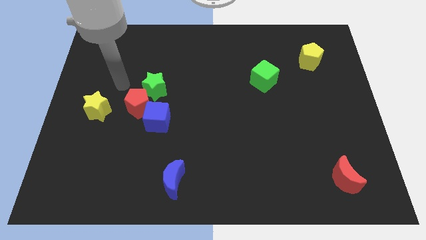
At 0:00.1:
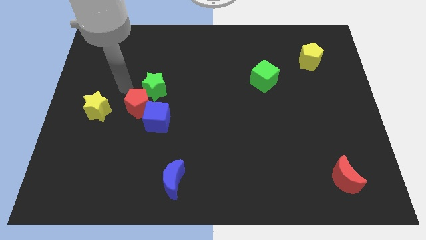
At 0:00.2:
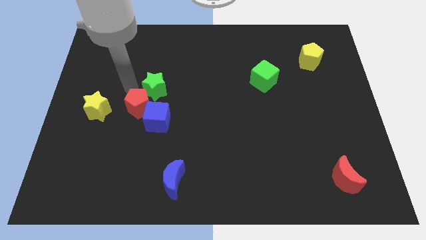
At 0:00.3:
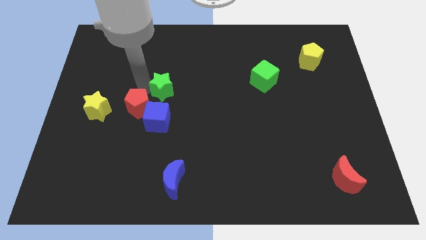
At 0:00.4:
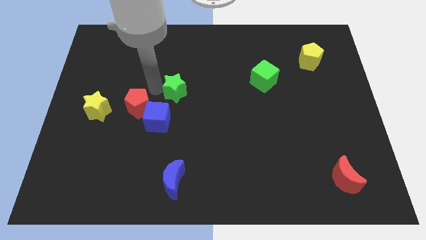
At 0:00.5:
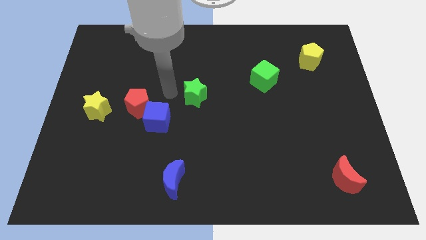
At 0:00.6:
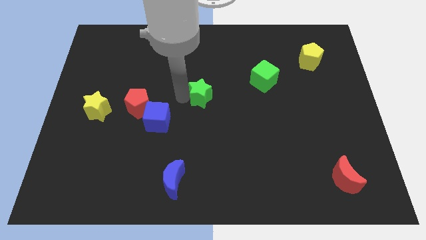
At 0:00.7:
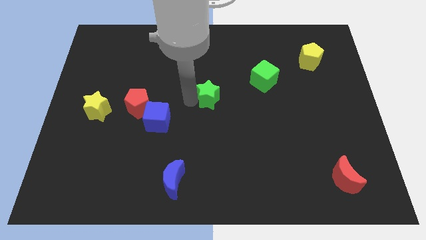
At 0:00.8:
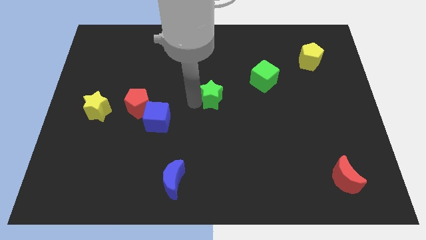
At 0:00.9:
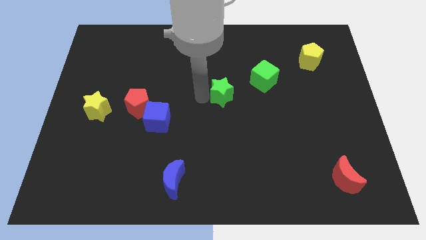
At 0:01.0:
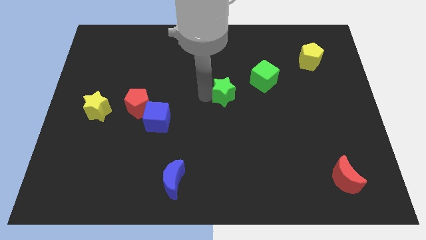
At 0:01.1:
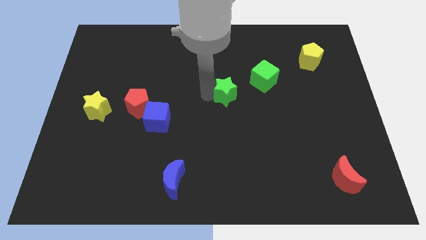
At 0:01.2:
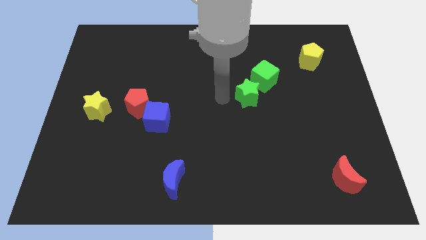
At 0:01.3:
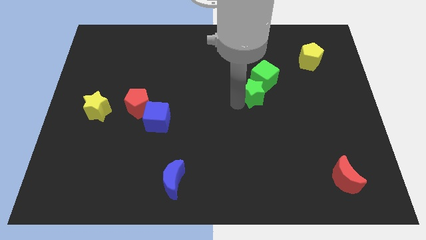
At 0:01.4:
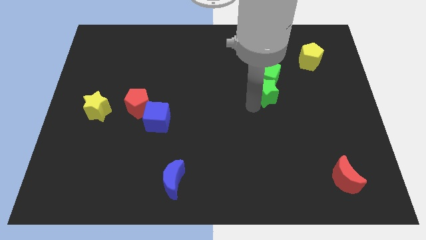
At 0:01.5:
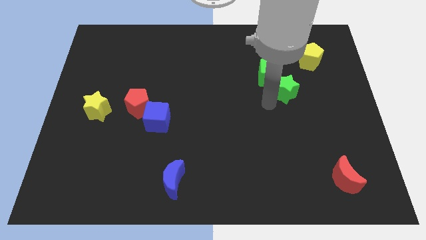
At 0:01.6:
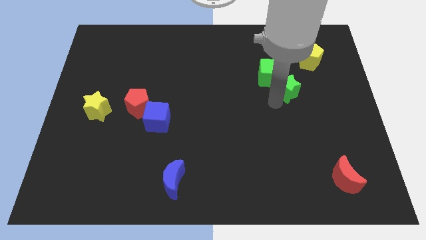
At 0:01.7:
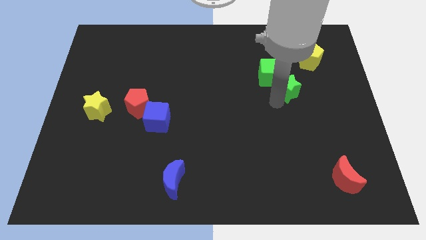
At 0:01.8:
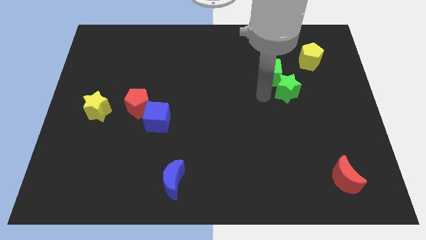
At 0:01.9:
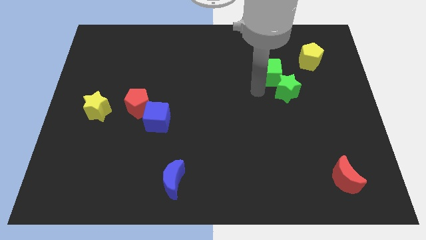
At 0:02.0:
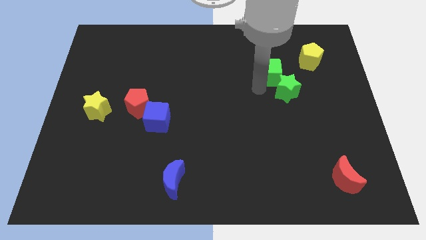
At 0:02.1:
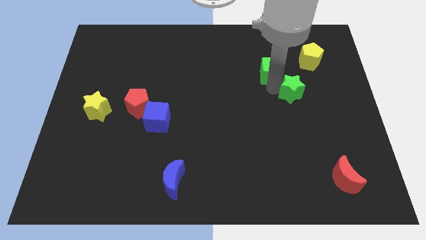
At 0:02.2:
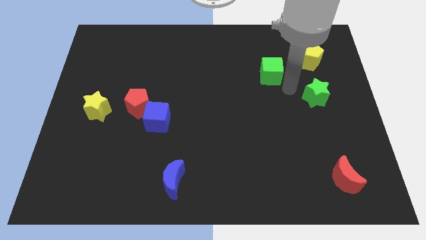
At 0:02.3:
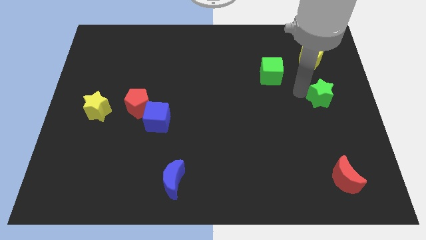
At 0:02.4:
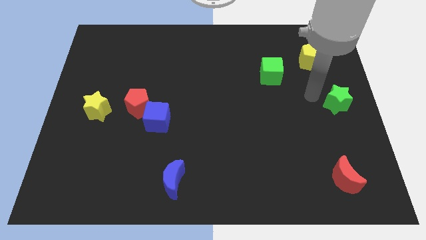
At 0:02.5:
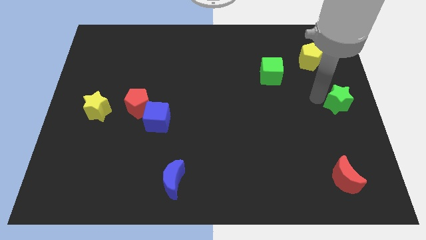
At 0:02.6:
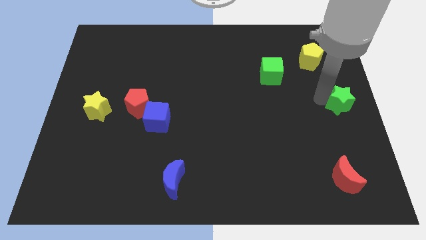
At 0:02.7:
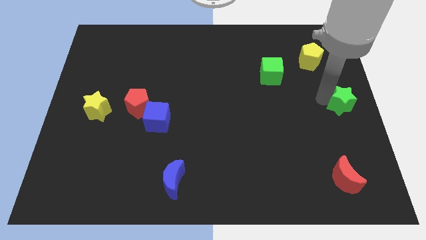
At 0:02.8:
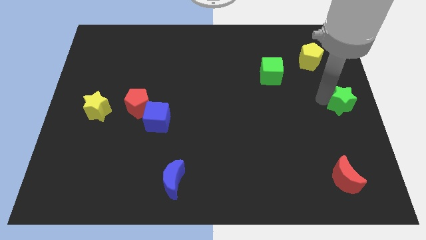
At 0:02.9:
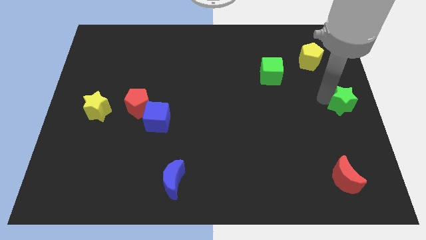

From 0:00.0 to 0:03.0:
move the green star to the center right of the board

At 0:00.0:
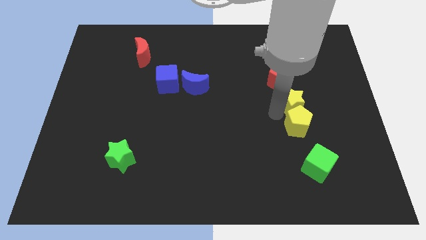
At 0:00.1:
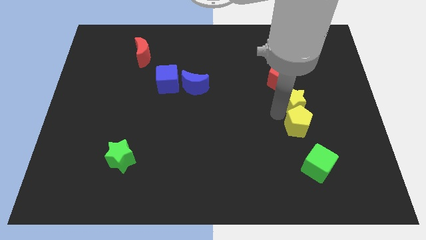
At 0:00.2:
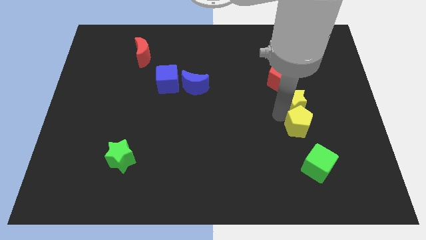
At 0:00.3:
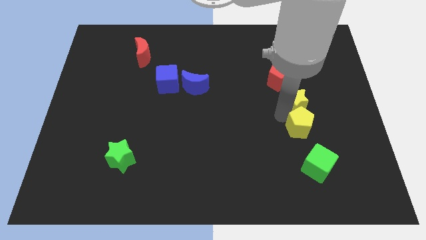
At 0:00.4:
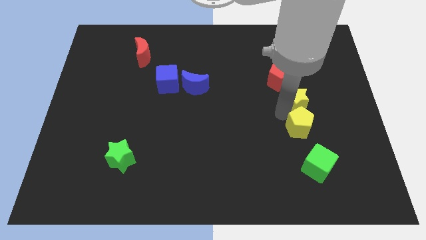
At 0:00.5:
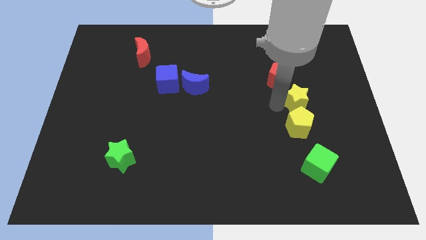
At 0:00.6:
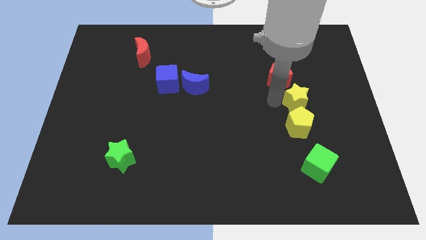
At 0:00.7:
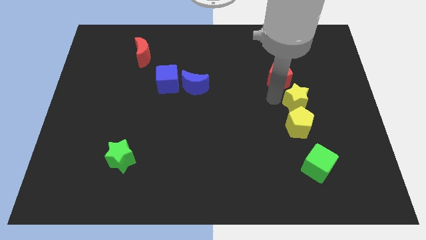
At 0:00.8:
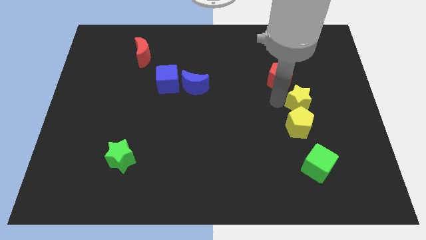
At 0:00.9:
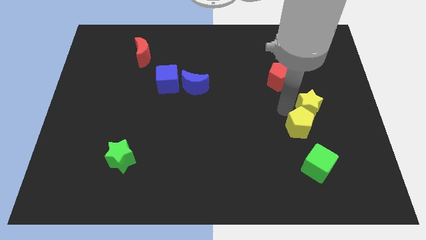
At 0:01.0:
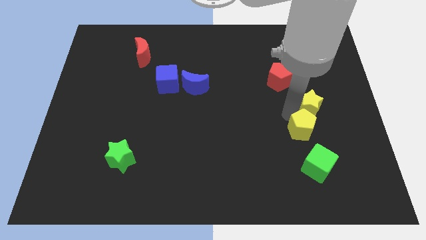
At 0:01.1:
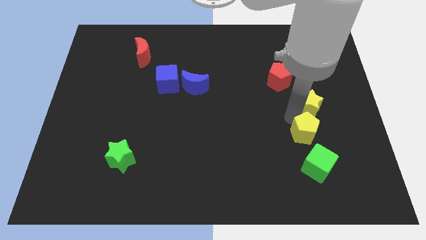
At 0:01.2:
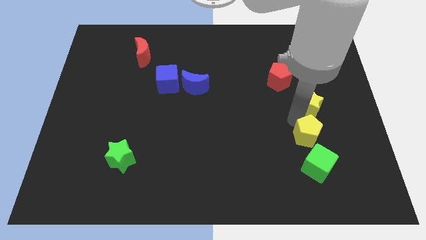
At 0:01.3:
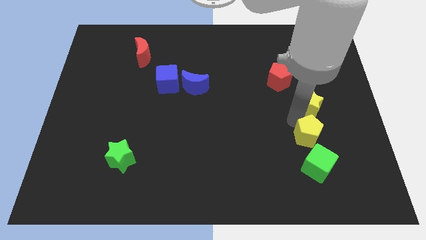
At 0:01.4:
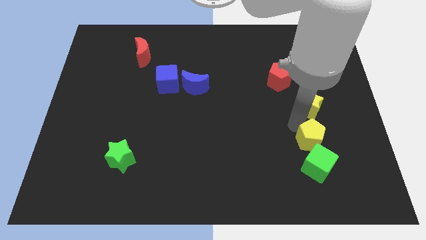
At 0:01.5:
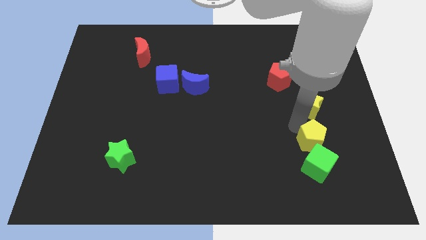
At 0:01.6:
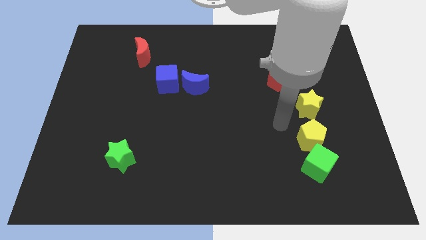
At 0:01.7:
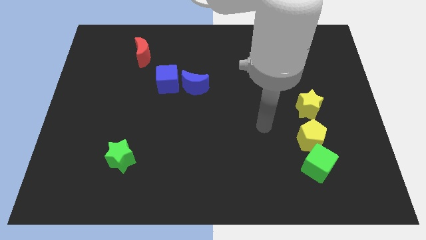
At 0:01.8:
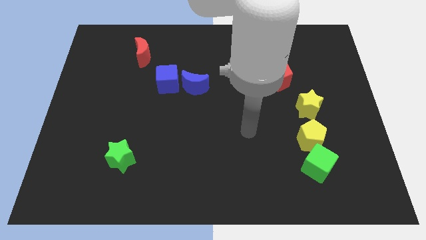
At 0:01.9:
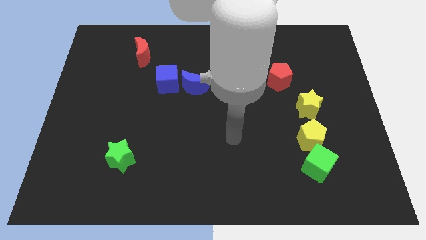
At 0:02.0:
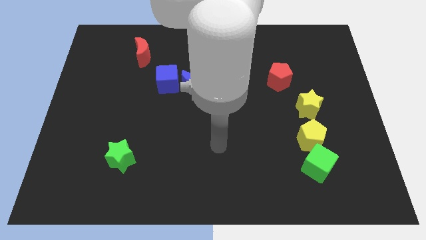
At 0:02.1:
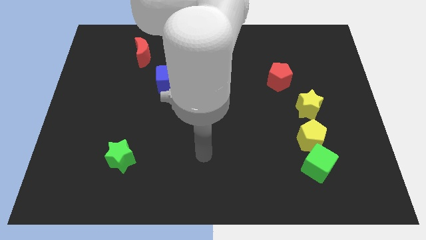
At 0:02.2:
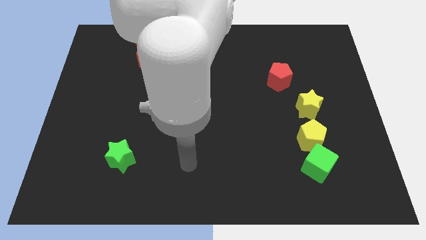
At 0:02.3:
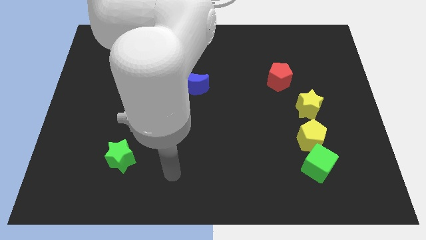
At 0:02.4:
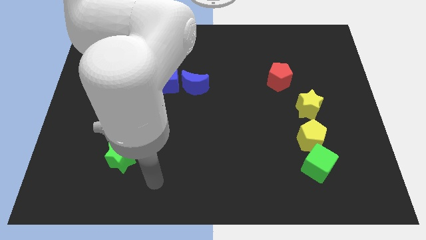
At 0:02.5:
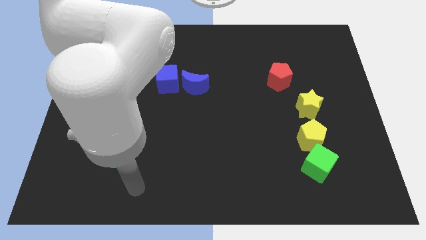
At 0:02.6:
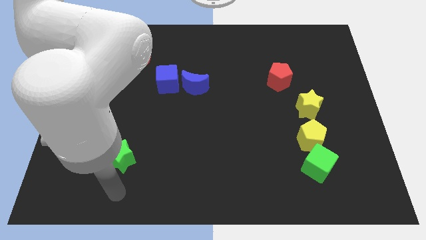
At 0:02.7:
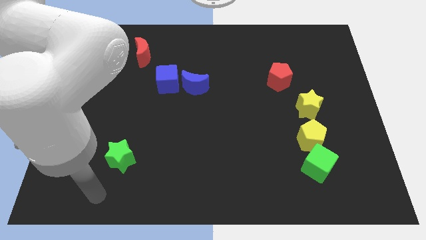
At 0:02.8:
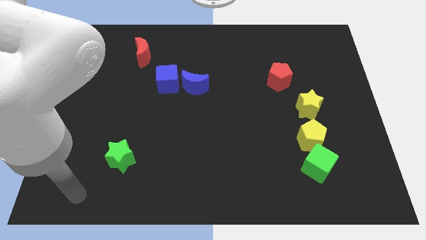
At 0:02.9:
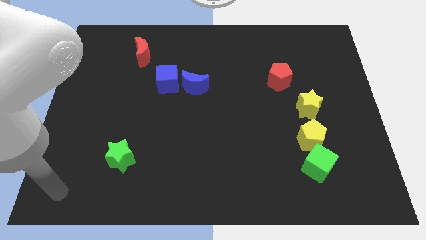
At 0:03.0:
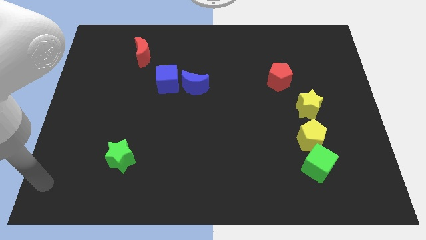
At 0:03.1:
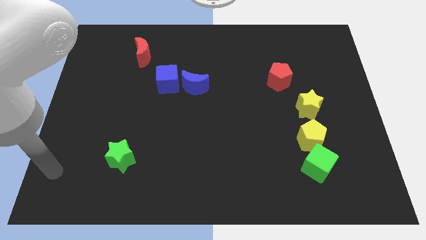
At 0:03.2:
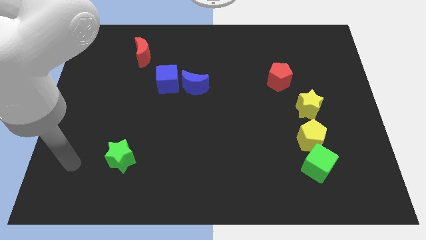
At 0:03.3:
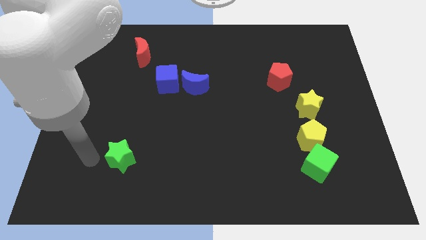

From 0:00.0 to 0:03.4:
adjust the yellow pentagon at the top of the green cube

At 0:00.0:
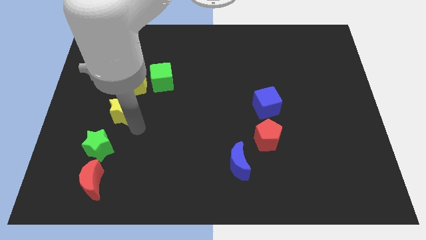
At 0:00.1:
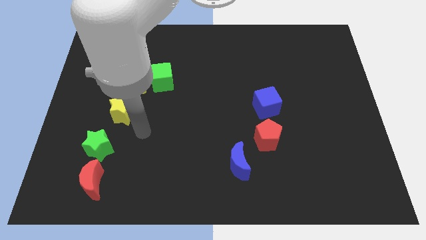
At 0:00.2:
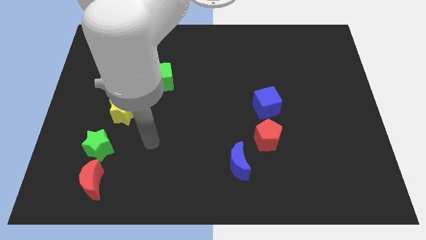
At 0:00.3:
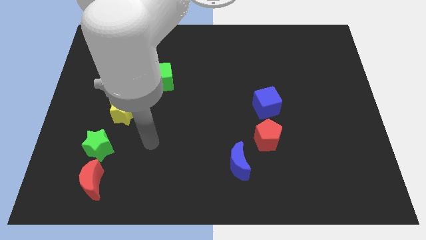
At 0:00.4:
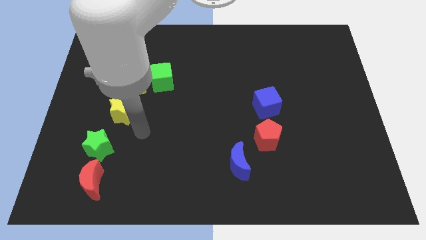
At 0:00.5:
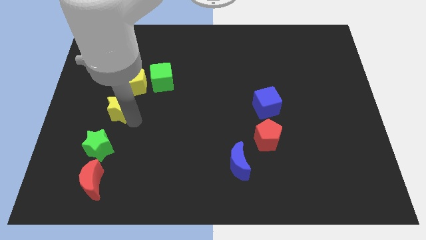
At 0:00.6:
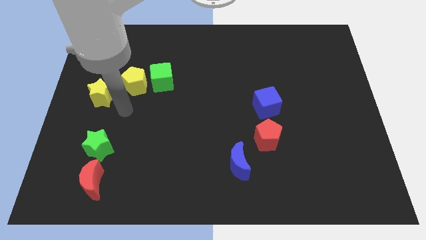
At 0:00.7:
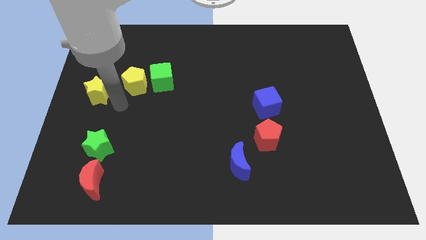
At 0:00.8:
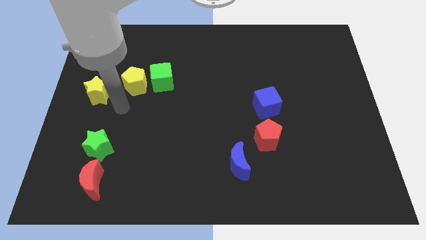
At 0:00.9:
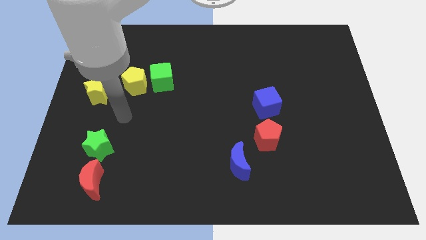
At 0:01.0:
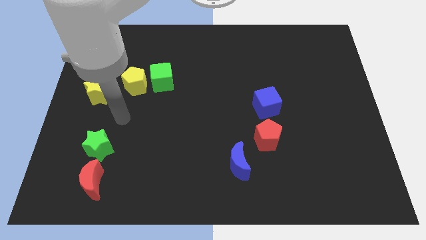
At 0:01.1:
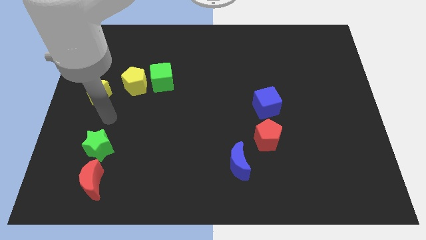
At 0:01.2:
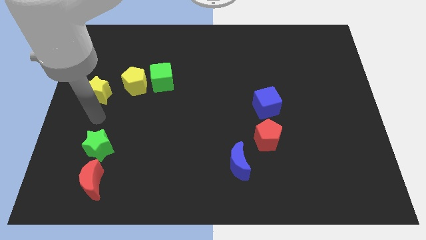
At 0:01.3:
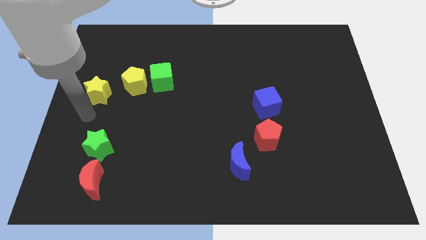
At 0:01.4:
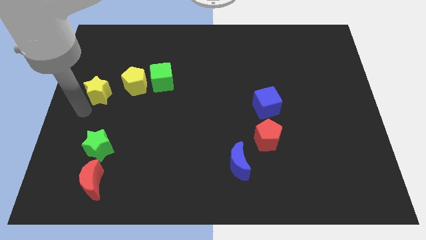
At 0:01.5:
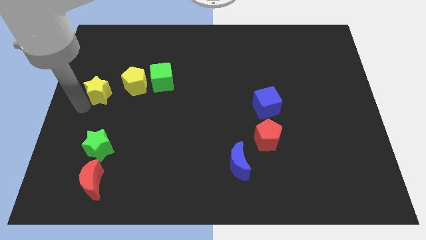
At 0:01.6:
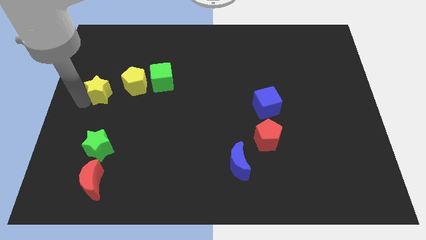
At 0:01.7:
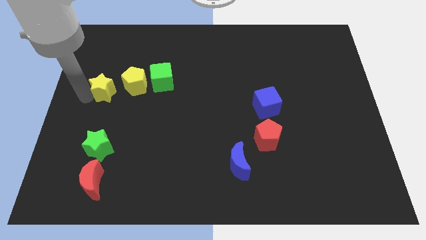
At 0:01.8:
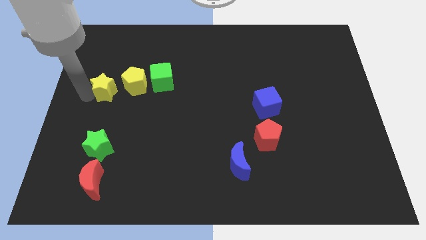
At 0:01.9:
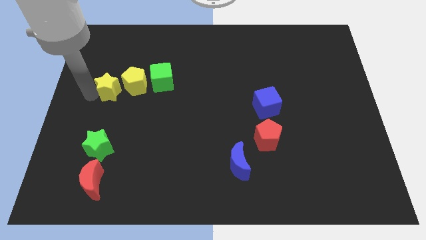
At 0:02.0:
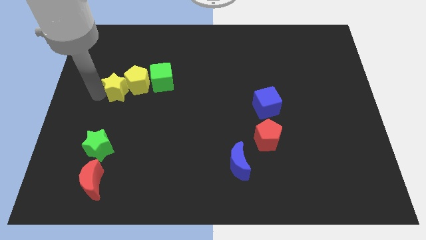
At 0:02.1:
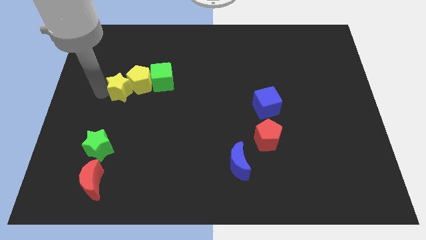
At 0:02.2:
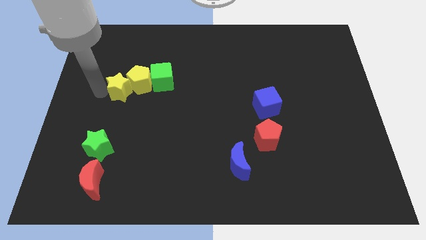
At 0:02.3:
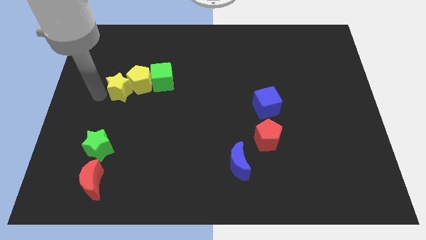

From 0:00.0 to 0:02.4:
push the yellow star into the yellow pentagon

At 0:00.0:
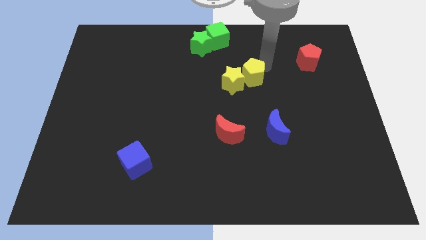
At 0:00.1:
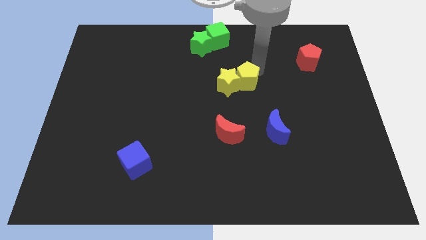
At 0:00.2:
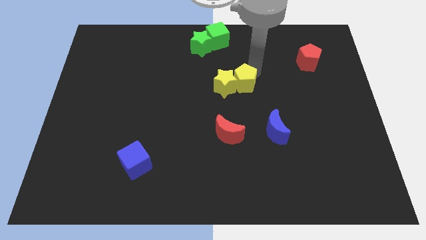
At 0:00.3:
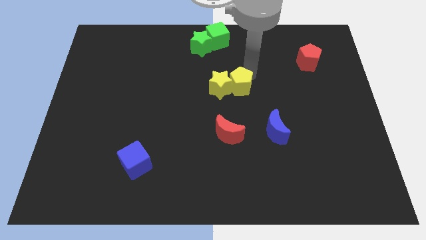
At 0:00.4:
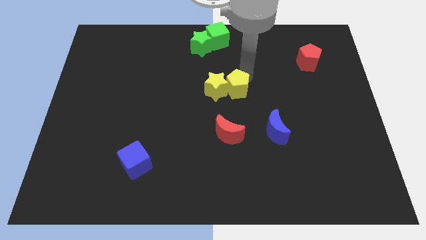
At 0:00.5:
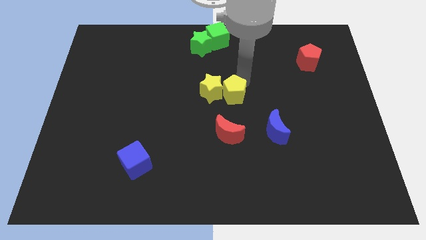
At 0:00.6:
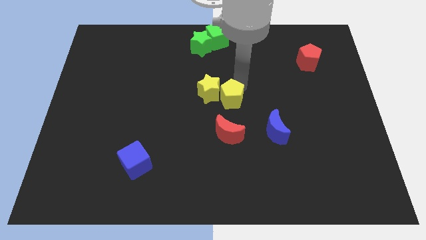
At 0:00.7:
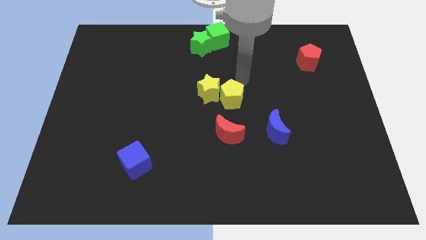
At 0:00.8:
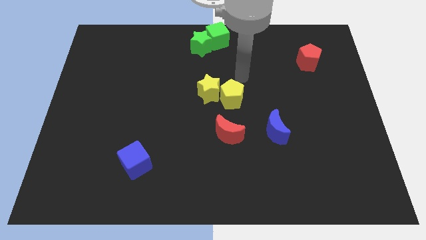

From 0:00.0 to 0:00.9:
push yellow pentagon into yellow star
